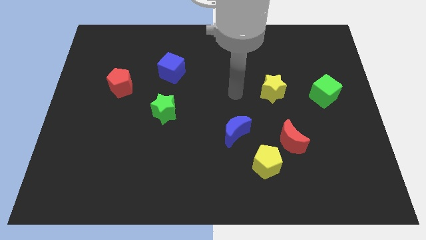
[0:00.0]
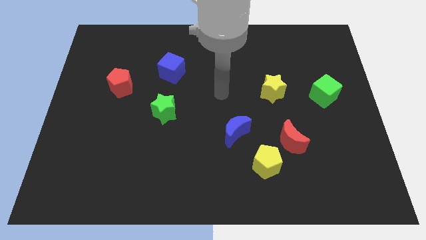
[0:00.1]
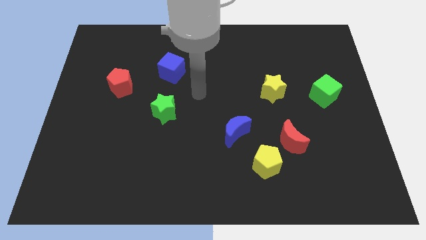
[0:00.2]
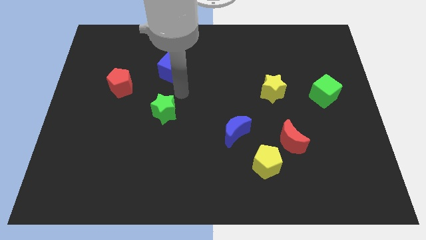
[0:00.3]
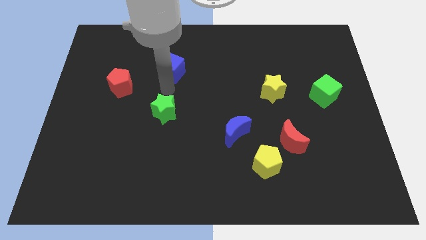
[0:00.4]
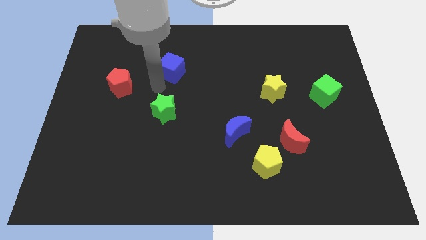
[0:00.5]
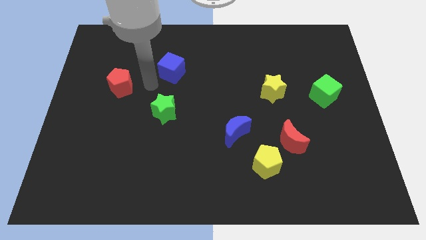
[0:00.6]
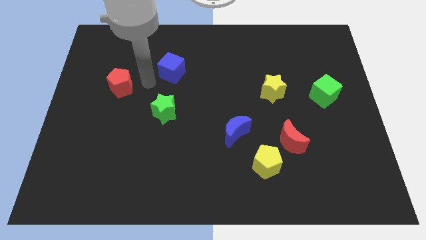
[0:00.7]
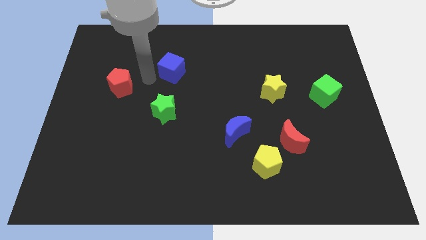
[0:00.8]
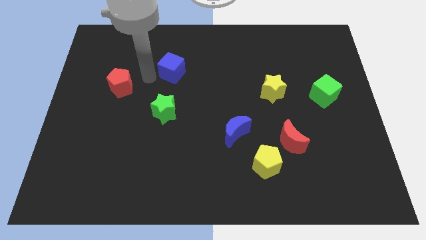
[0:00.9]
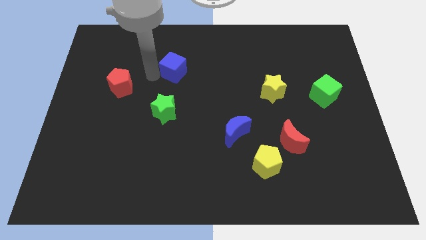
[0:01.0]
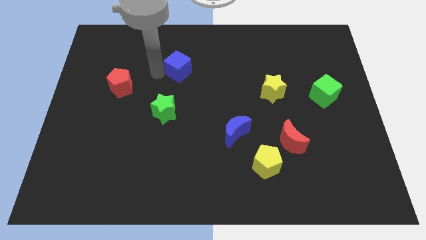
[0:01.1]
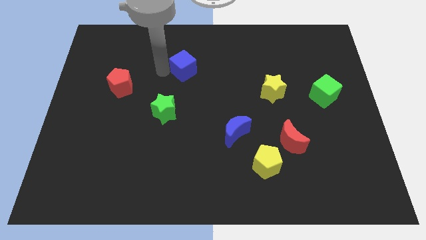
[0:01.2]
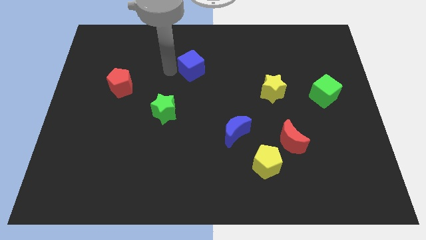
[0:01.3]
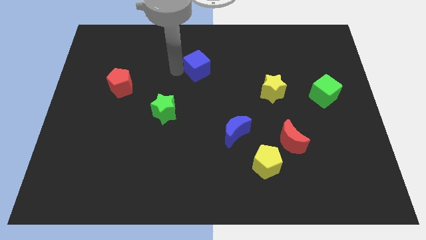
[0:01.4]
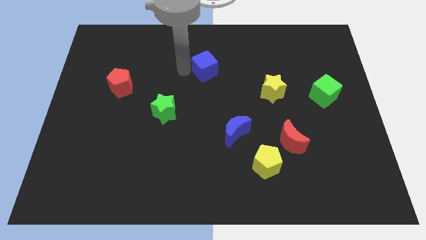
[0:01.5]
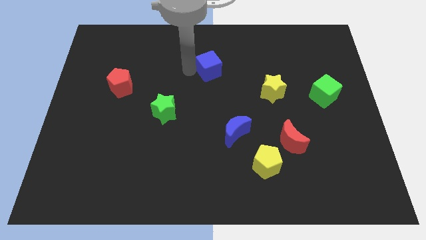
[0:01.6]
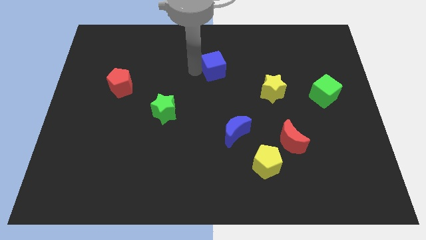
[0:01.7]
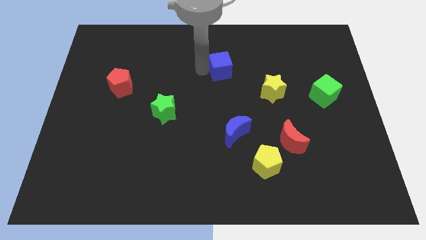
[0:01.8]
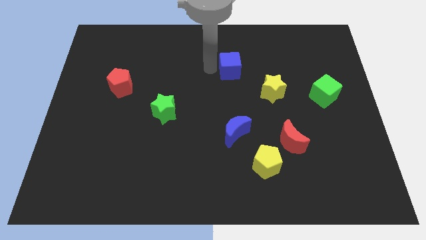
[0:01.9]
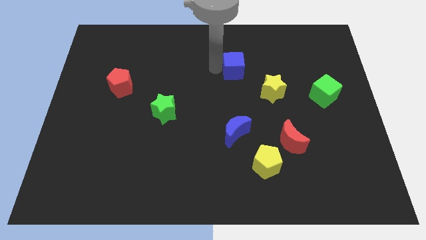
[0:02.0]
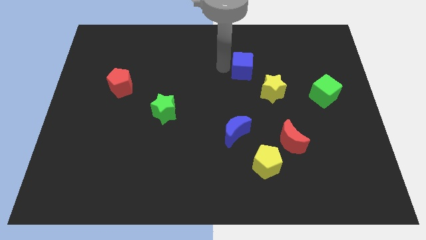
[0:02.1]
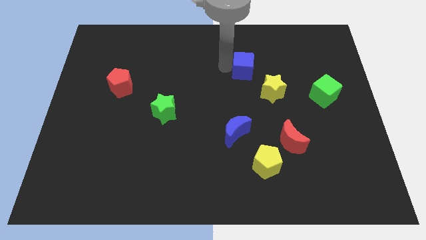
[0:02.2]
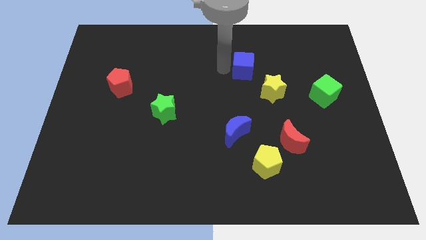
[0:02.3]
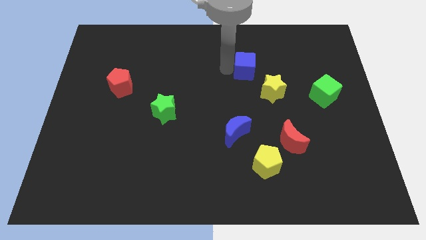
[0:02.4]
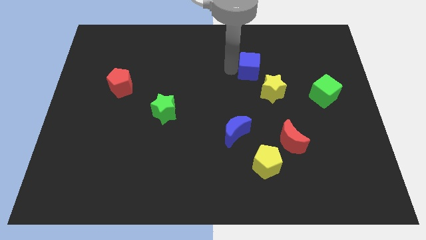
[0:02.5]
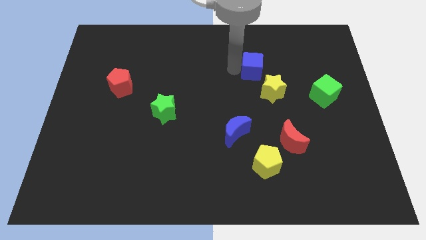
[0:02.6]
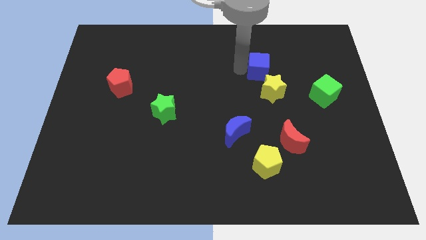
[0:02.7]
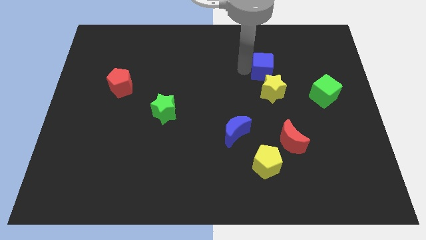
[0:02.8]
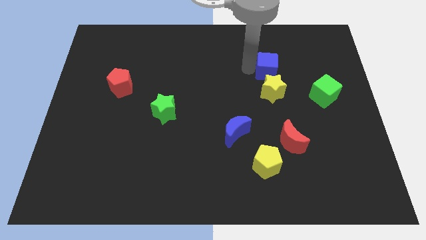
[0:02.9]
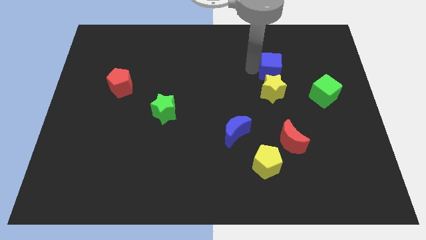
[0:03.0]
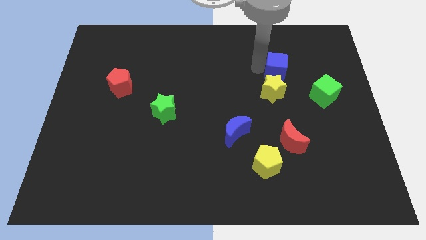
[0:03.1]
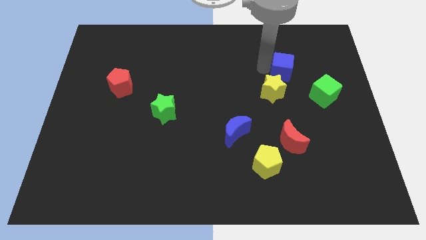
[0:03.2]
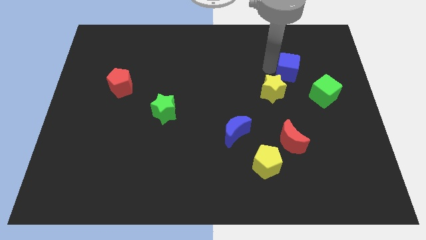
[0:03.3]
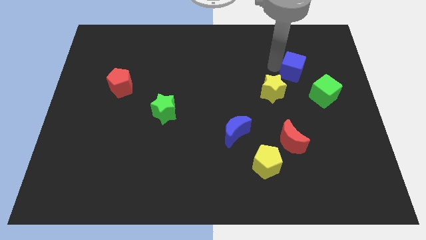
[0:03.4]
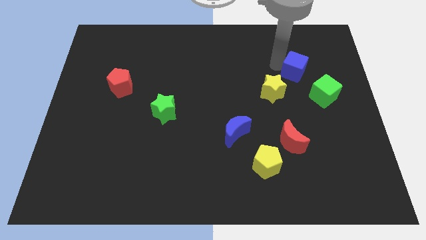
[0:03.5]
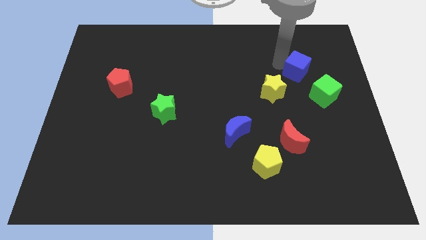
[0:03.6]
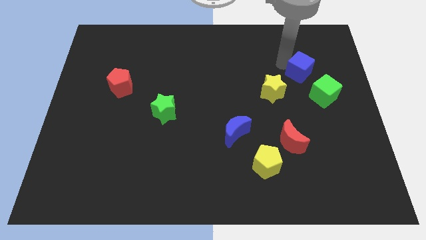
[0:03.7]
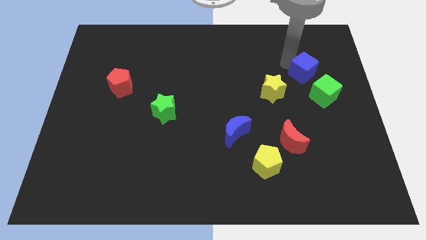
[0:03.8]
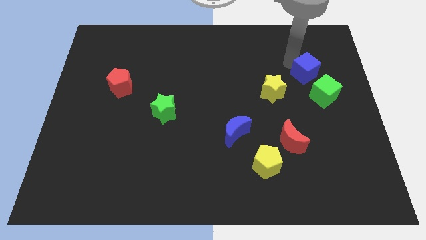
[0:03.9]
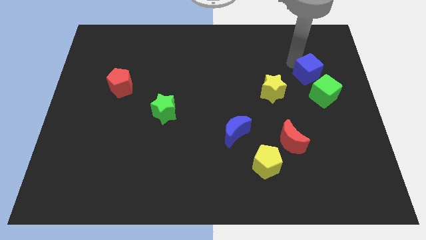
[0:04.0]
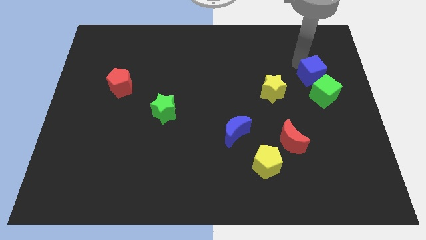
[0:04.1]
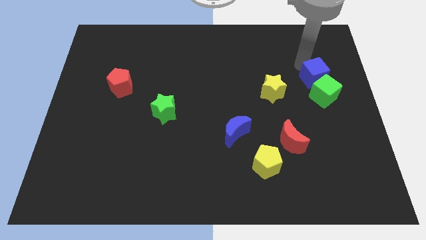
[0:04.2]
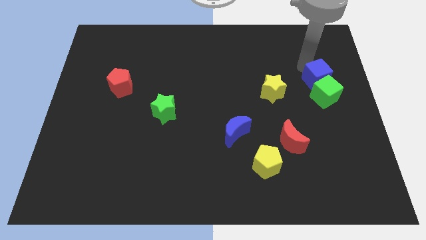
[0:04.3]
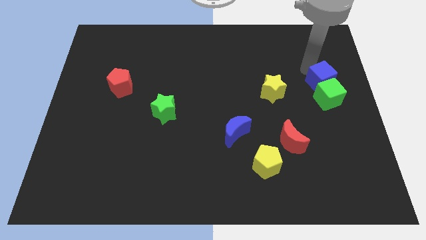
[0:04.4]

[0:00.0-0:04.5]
put the blue cube to the green cube

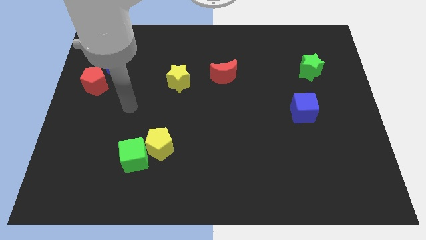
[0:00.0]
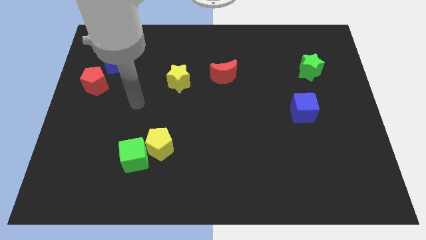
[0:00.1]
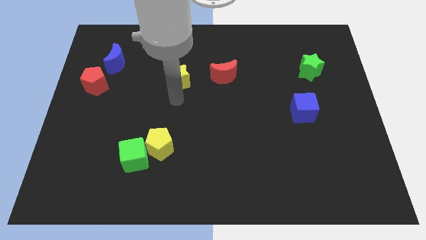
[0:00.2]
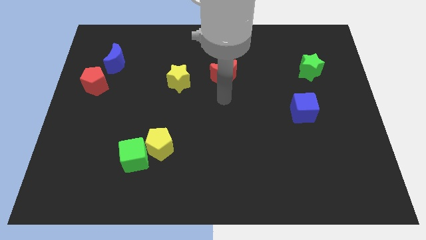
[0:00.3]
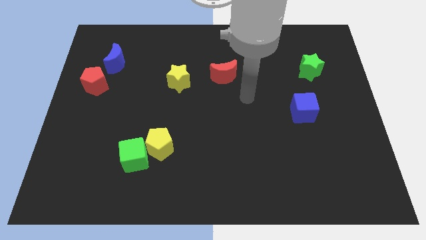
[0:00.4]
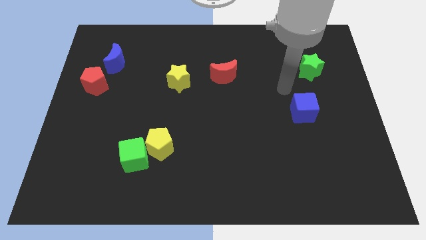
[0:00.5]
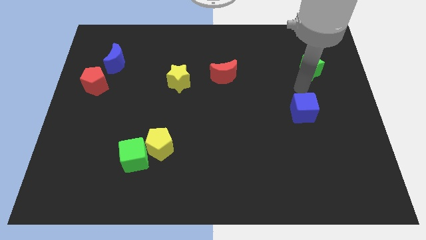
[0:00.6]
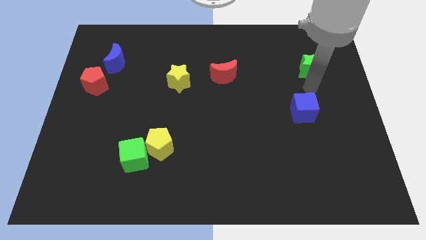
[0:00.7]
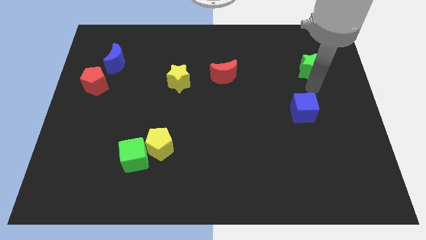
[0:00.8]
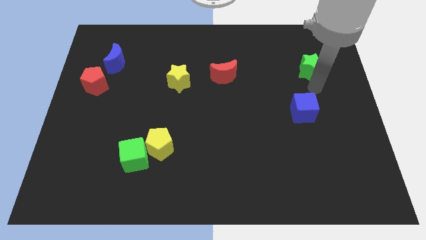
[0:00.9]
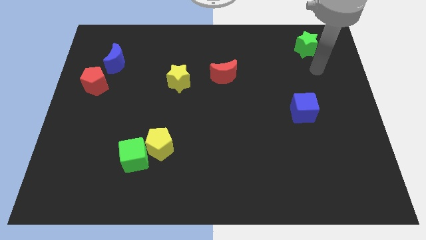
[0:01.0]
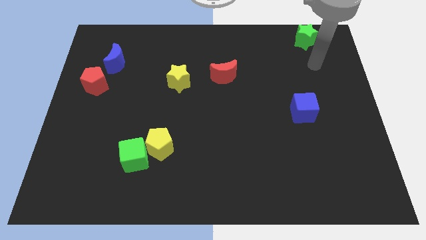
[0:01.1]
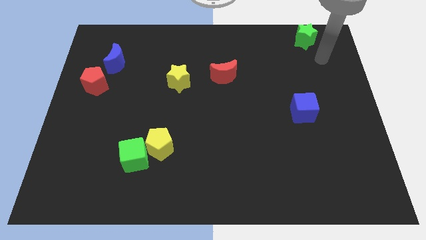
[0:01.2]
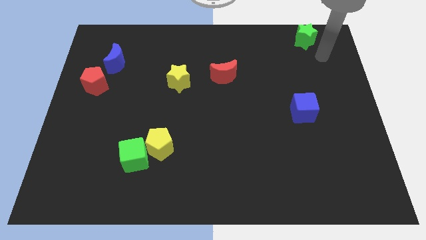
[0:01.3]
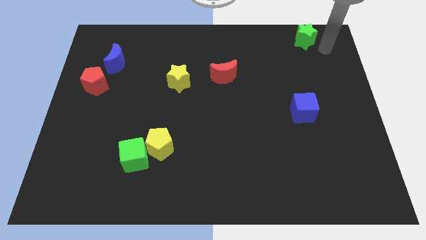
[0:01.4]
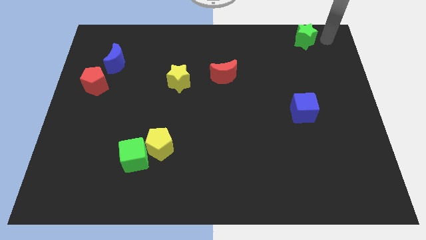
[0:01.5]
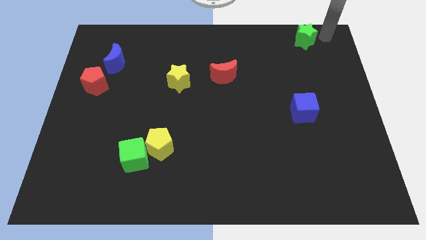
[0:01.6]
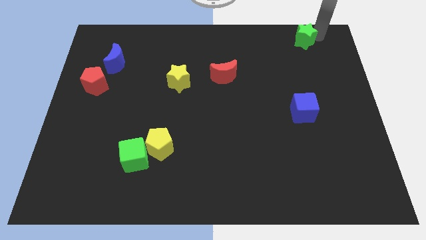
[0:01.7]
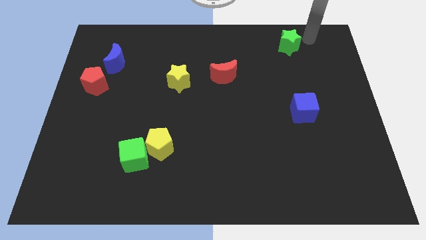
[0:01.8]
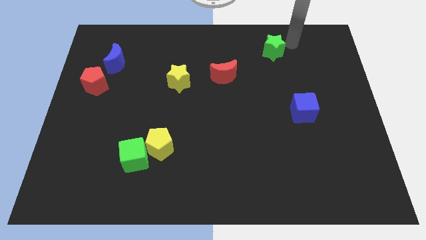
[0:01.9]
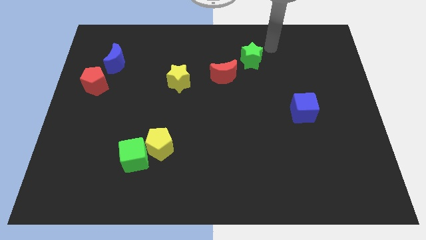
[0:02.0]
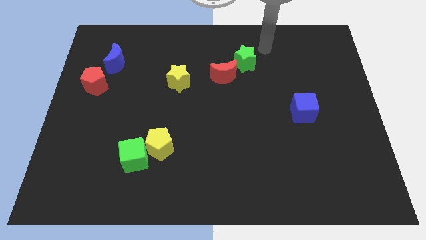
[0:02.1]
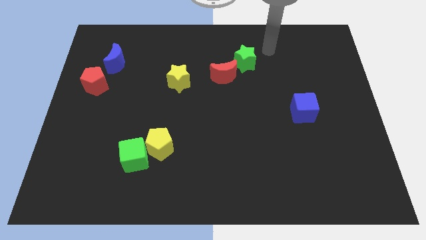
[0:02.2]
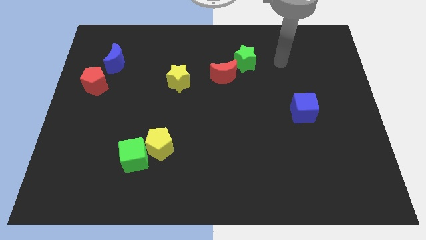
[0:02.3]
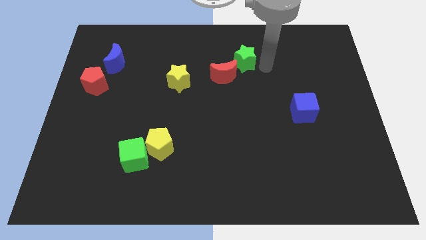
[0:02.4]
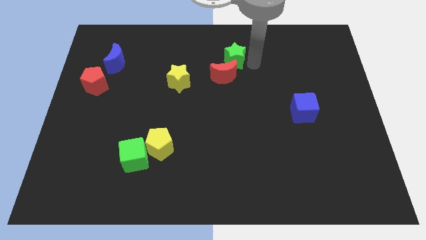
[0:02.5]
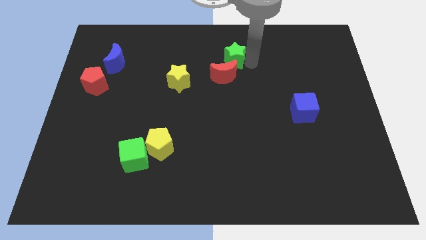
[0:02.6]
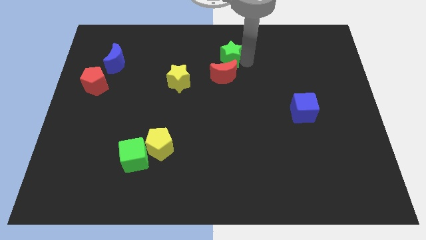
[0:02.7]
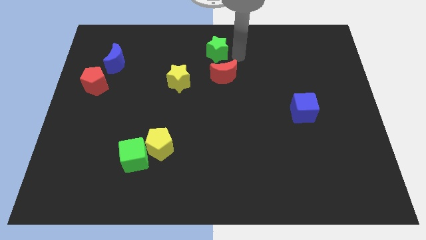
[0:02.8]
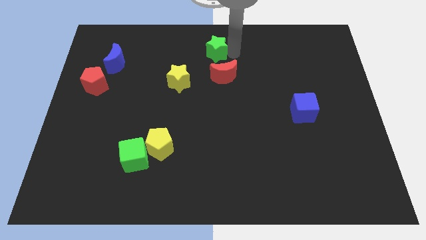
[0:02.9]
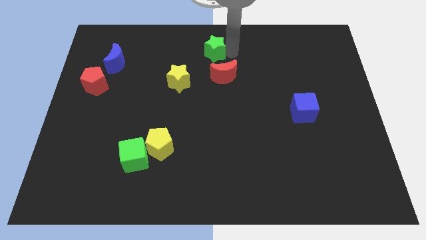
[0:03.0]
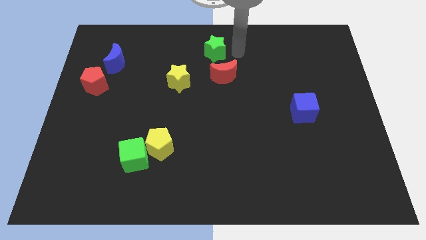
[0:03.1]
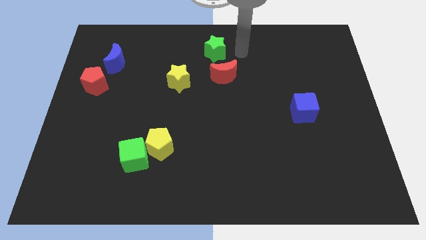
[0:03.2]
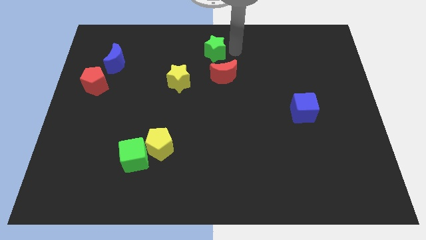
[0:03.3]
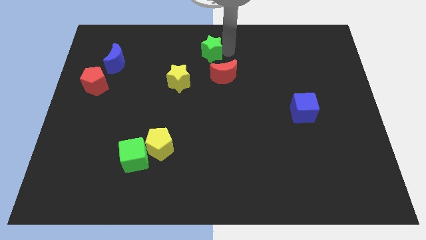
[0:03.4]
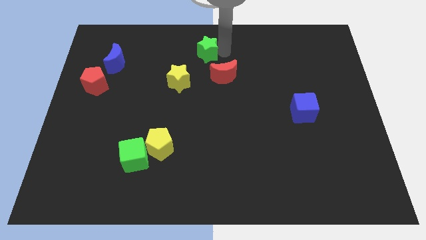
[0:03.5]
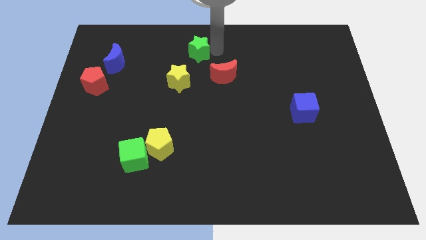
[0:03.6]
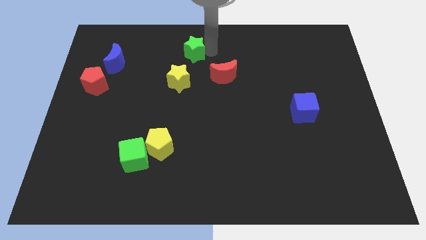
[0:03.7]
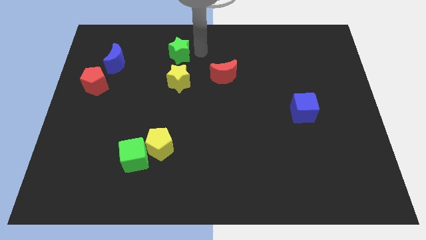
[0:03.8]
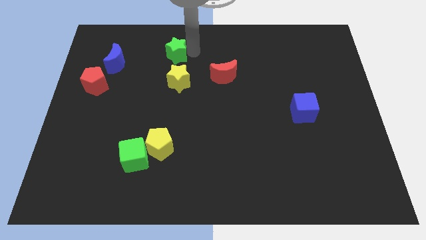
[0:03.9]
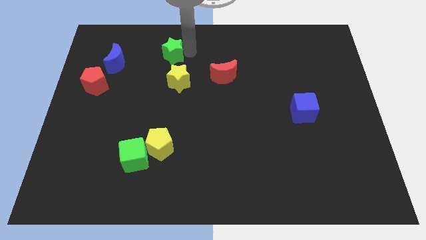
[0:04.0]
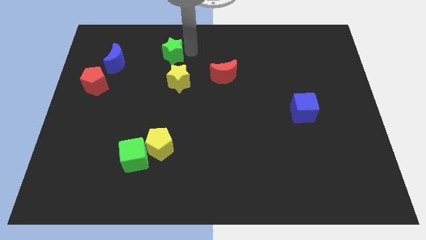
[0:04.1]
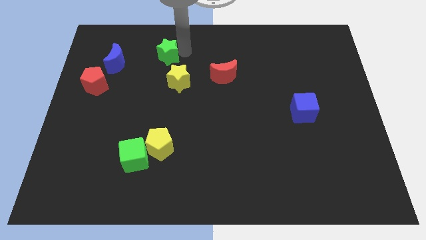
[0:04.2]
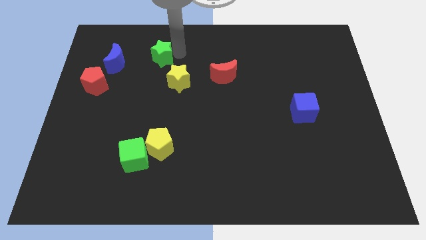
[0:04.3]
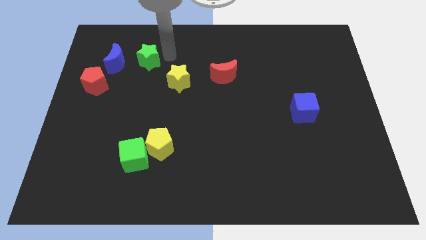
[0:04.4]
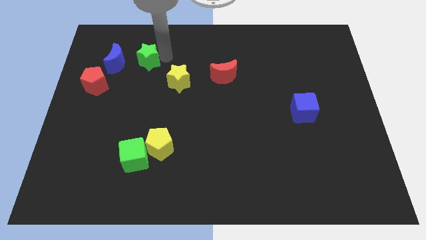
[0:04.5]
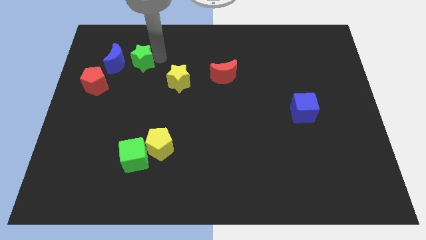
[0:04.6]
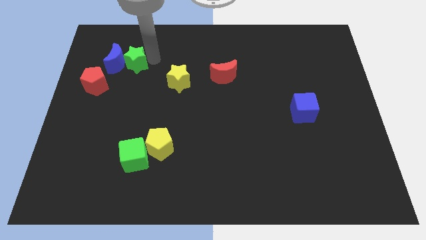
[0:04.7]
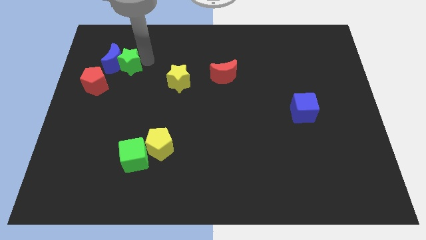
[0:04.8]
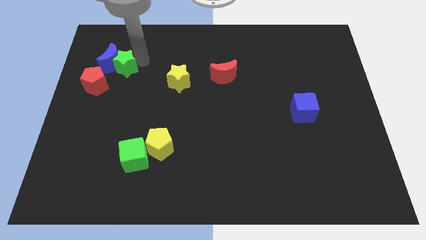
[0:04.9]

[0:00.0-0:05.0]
put the green star close to the blue moon
